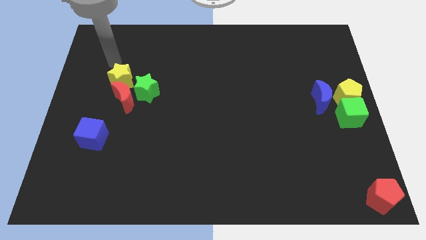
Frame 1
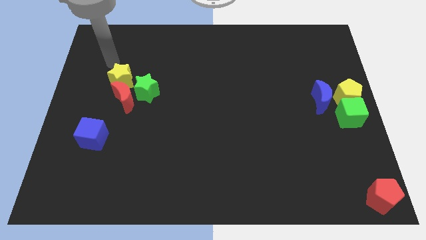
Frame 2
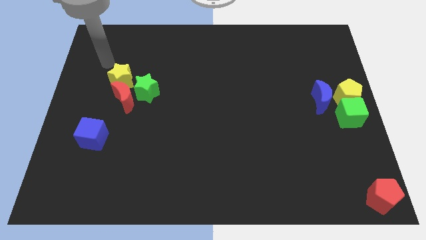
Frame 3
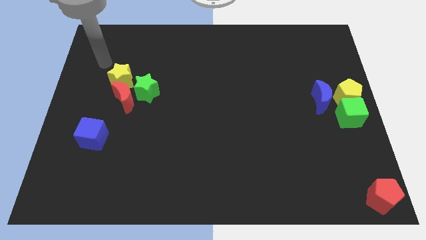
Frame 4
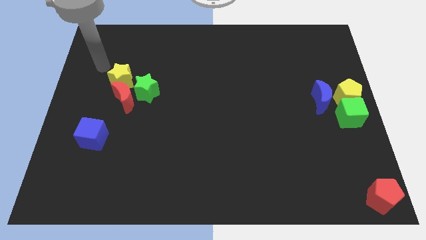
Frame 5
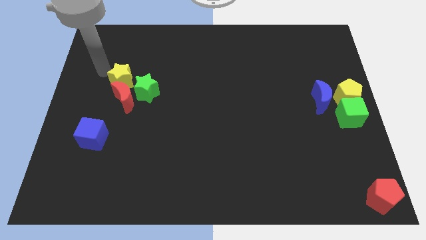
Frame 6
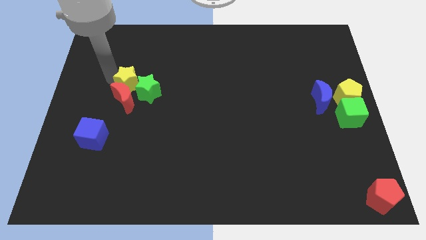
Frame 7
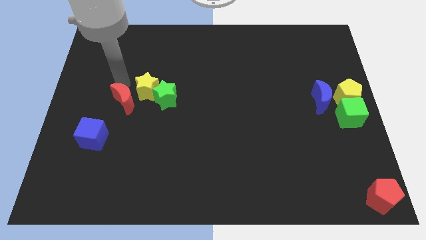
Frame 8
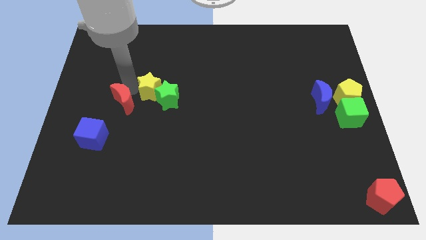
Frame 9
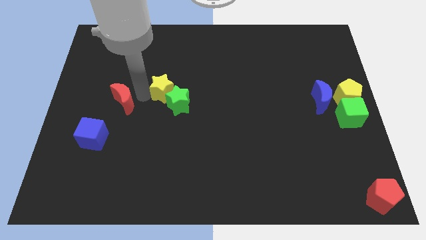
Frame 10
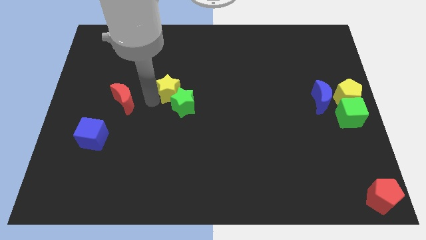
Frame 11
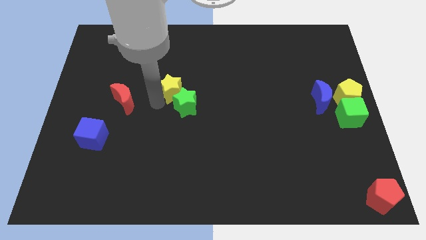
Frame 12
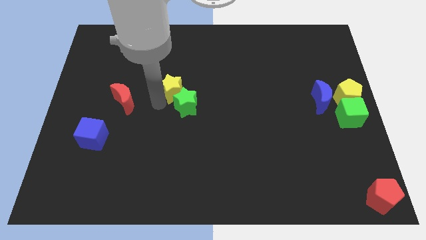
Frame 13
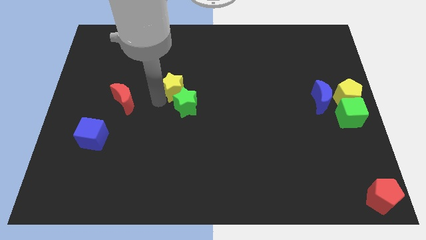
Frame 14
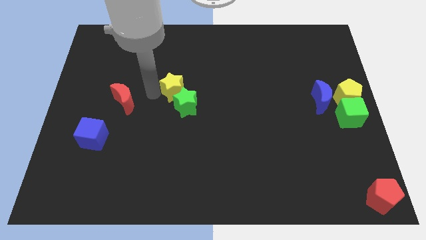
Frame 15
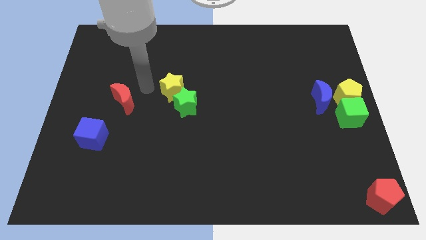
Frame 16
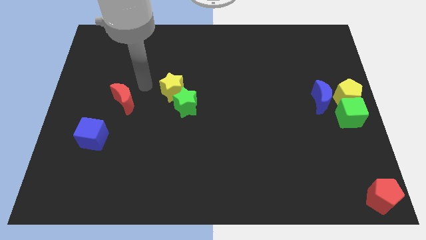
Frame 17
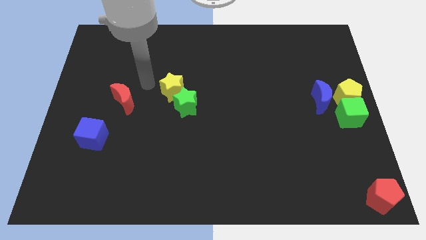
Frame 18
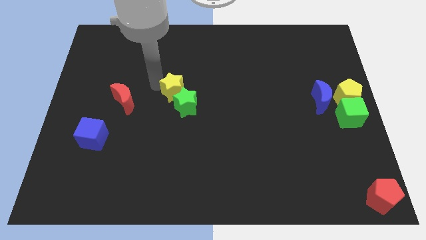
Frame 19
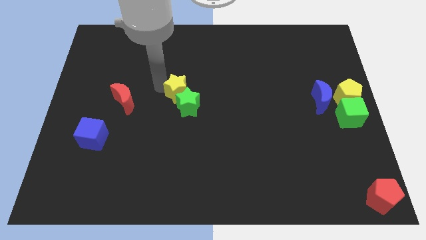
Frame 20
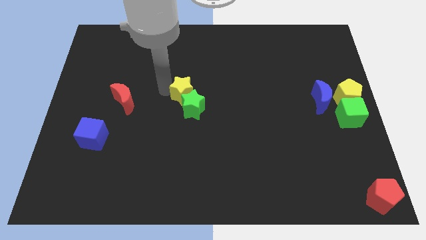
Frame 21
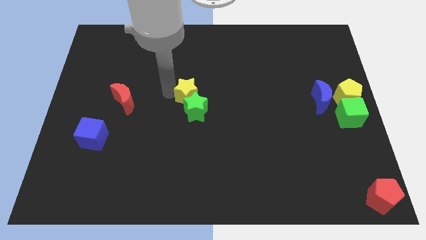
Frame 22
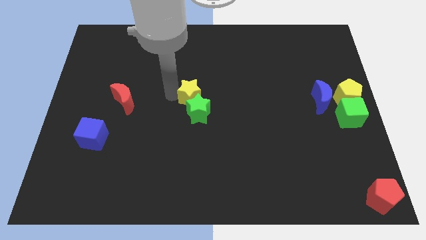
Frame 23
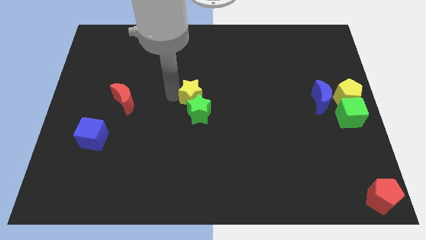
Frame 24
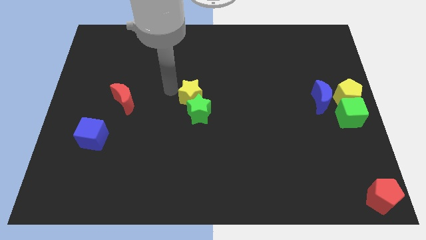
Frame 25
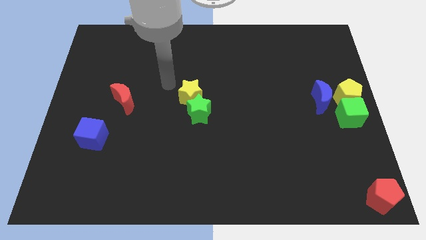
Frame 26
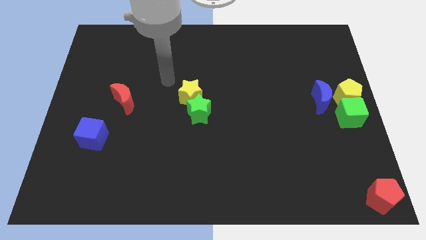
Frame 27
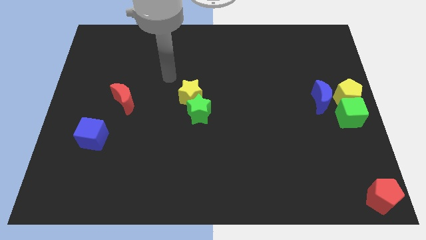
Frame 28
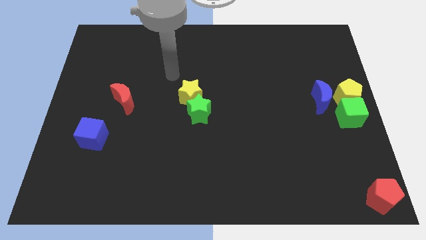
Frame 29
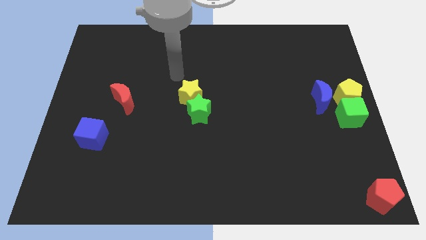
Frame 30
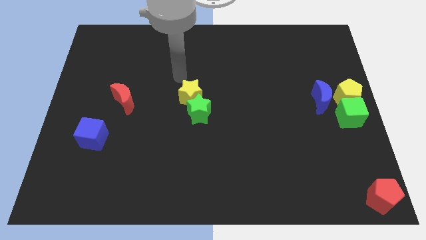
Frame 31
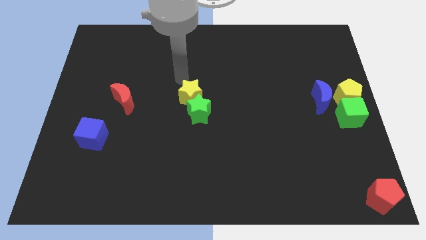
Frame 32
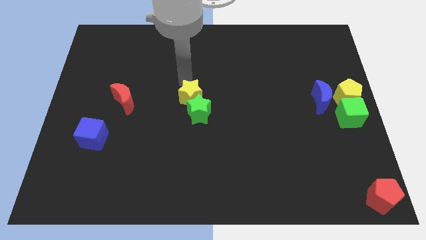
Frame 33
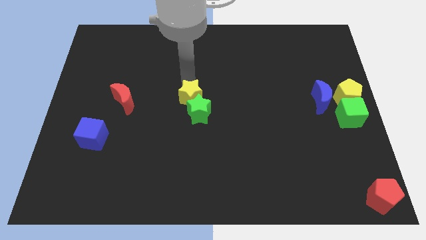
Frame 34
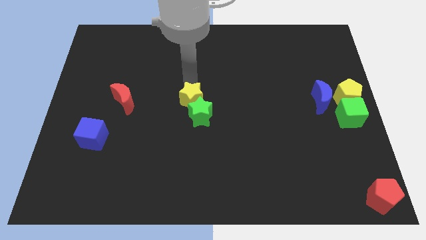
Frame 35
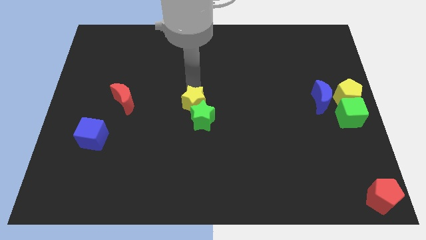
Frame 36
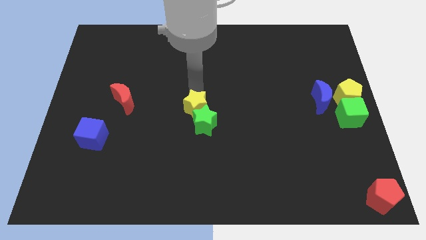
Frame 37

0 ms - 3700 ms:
move the yellow star into the green star

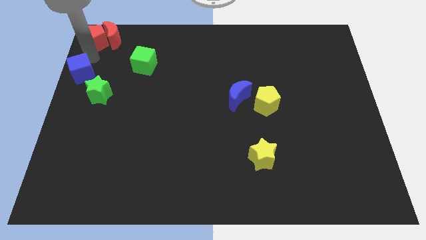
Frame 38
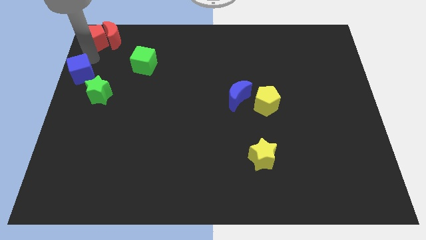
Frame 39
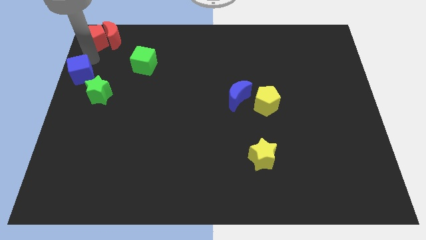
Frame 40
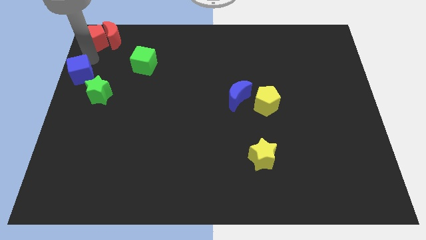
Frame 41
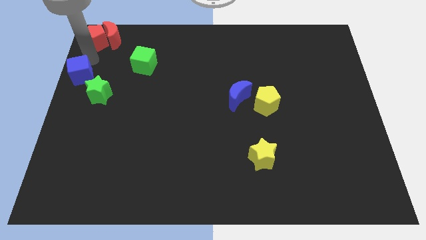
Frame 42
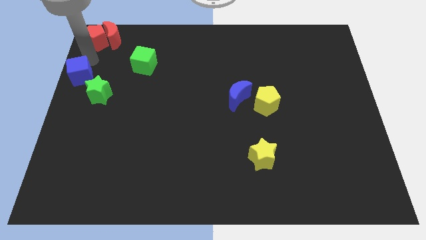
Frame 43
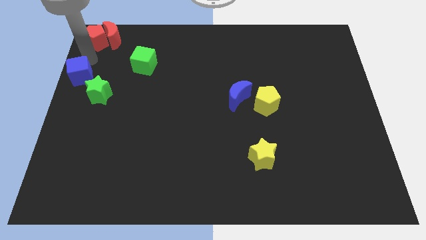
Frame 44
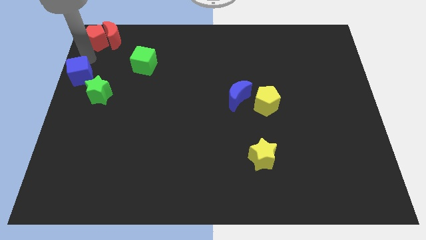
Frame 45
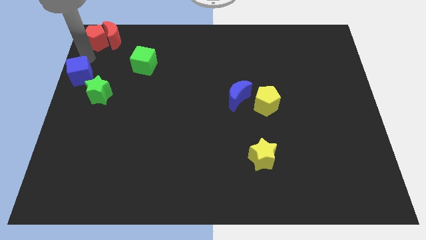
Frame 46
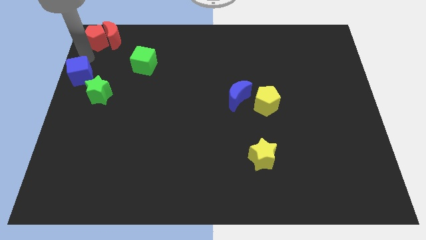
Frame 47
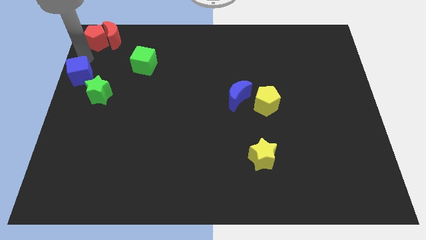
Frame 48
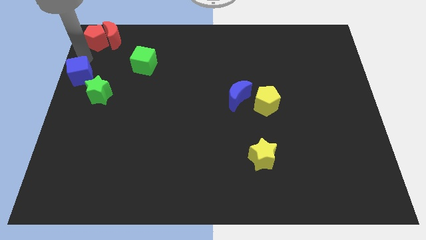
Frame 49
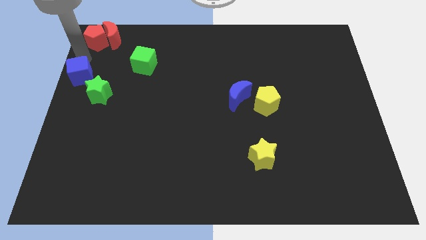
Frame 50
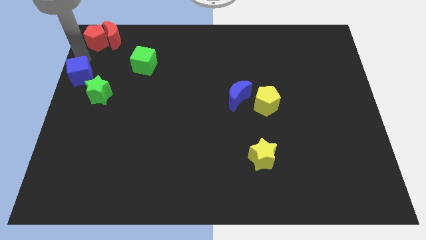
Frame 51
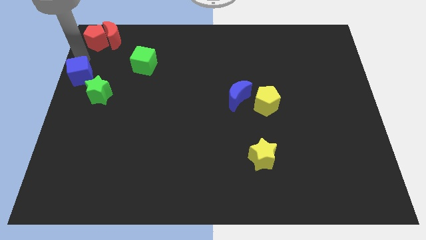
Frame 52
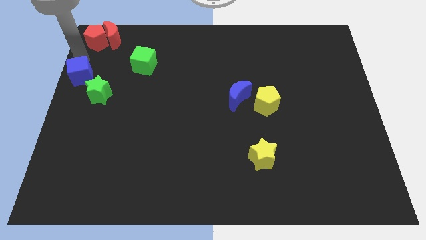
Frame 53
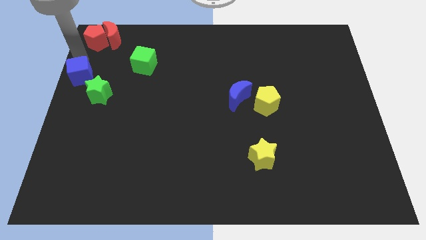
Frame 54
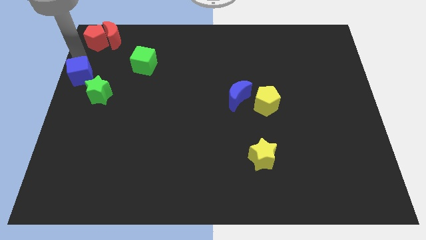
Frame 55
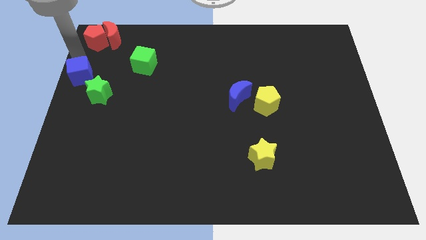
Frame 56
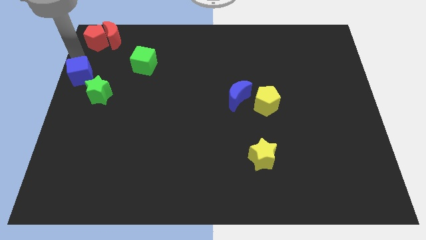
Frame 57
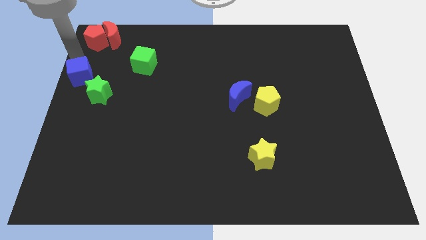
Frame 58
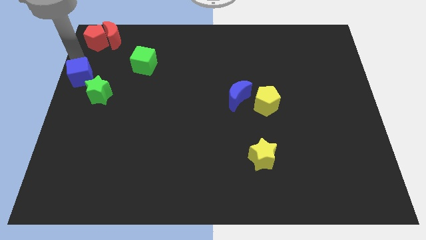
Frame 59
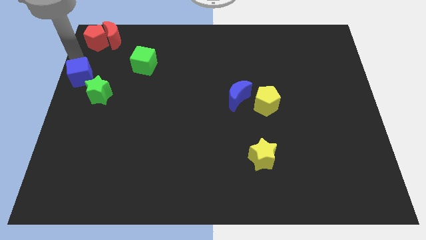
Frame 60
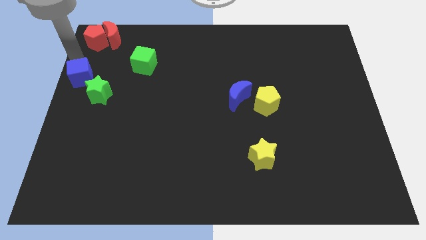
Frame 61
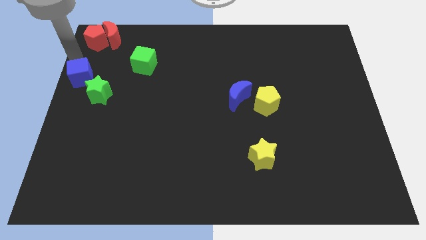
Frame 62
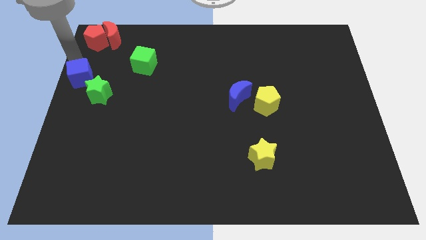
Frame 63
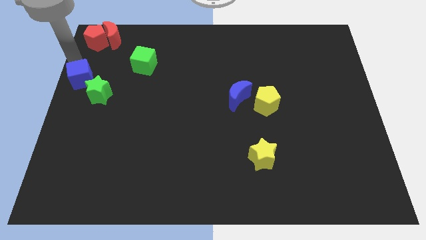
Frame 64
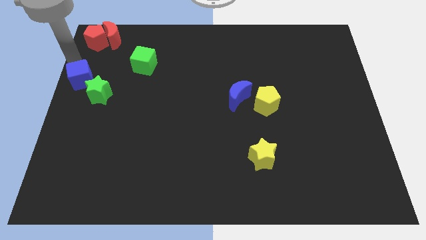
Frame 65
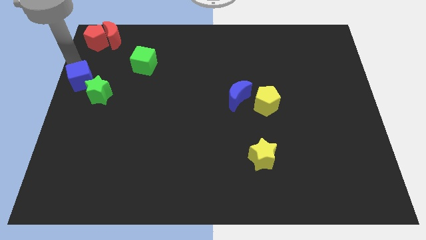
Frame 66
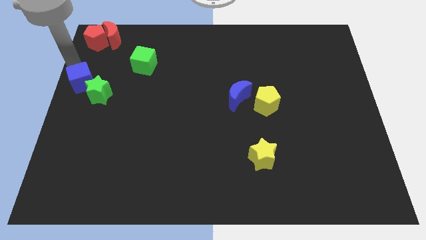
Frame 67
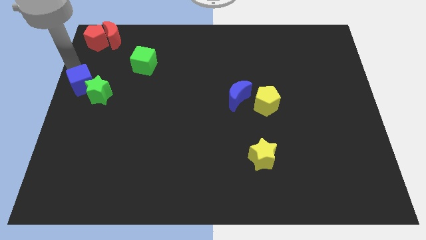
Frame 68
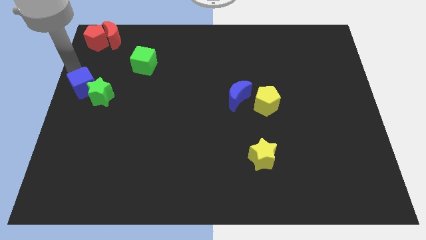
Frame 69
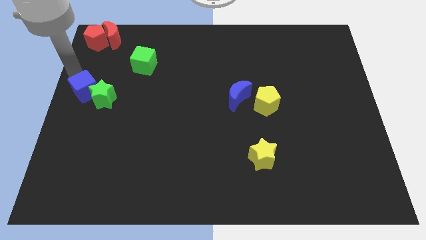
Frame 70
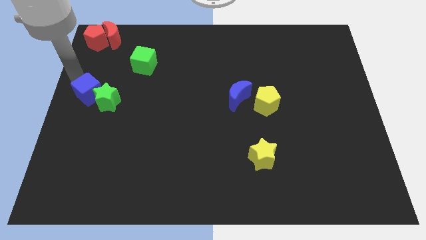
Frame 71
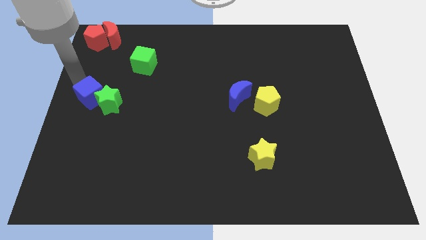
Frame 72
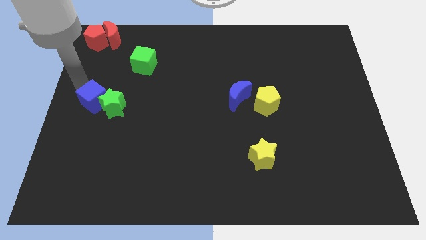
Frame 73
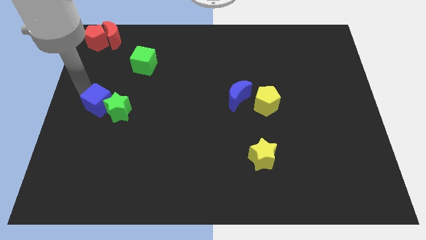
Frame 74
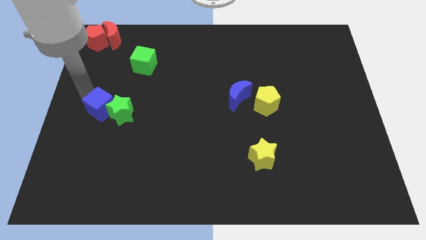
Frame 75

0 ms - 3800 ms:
slide the blue cube into the green star

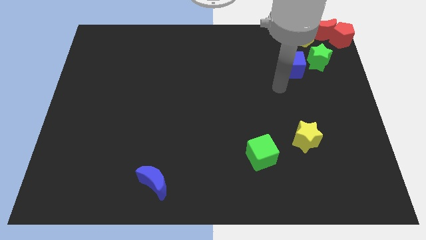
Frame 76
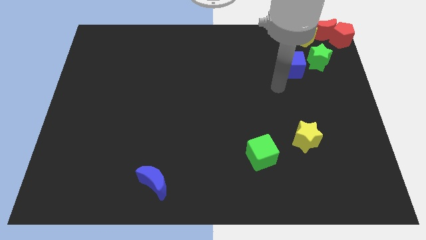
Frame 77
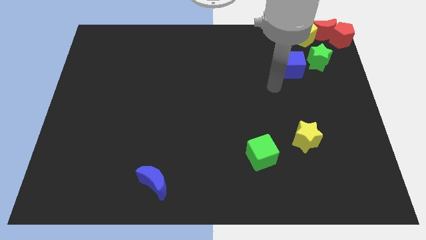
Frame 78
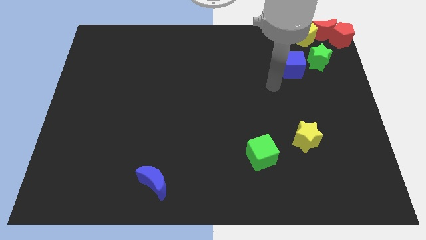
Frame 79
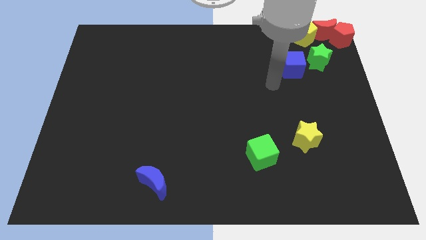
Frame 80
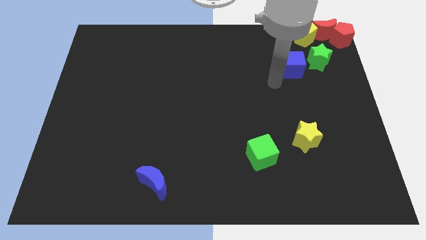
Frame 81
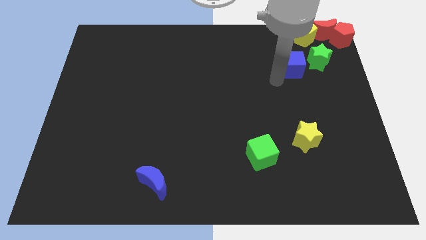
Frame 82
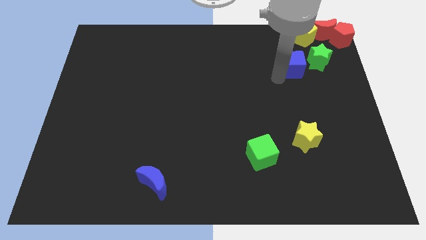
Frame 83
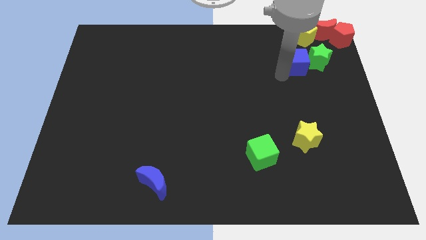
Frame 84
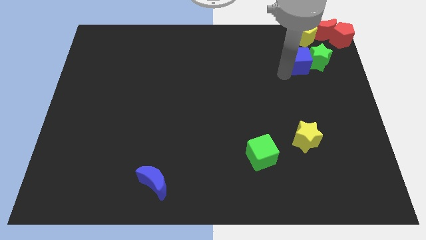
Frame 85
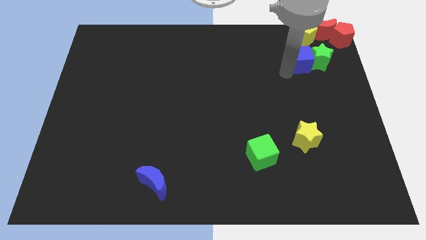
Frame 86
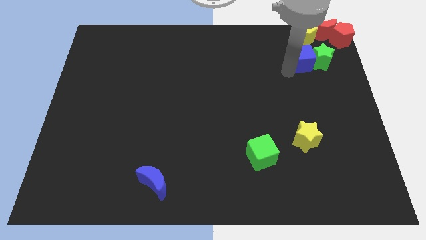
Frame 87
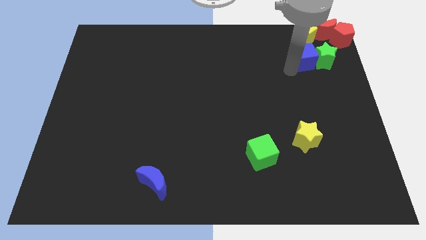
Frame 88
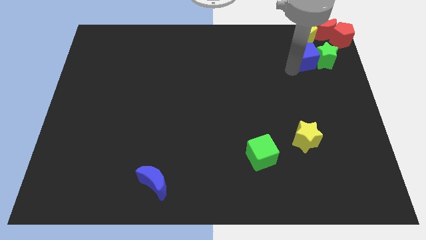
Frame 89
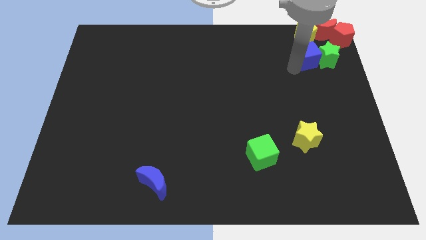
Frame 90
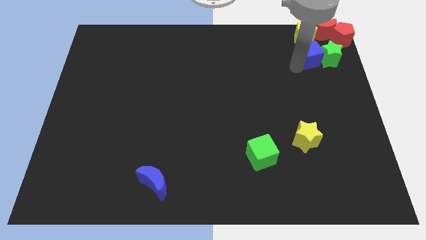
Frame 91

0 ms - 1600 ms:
move the blue cube into the green star
